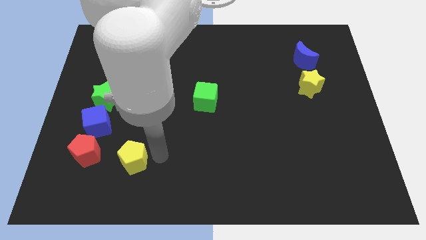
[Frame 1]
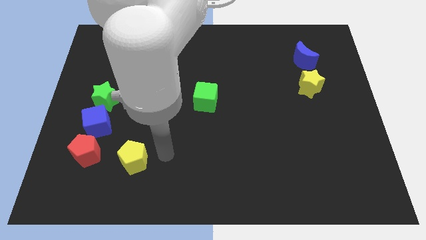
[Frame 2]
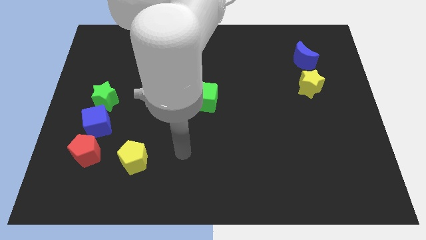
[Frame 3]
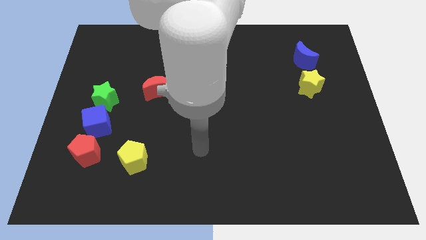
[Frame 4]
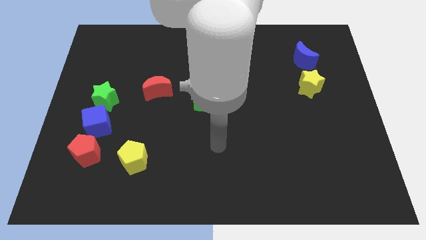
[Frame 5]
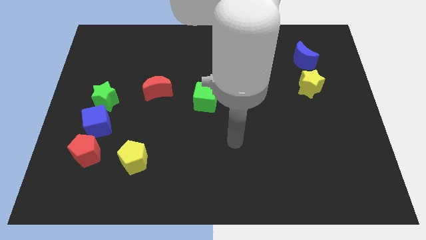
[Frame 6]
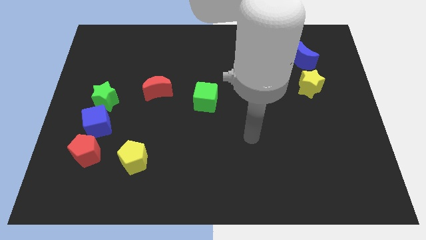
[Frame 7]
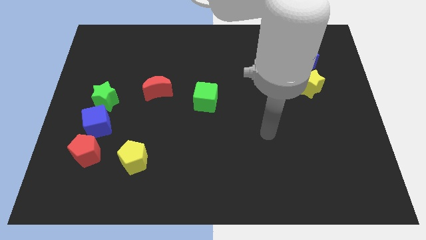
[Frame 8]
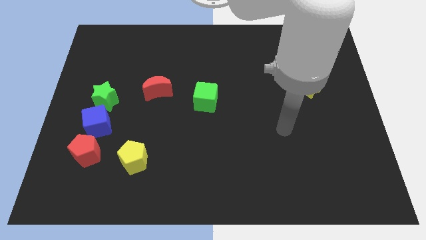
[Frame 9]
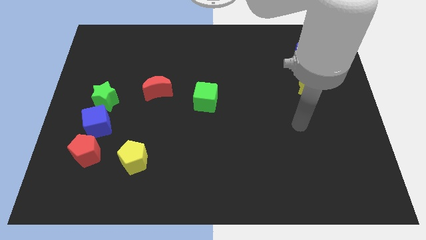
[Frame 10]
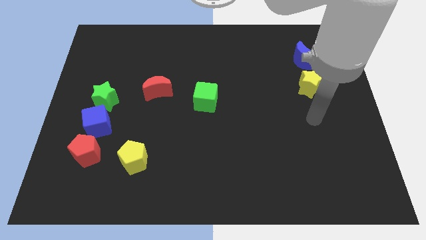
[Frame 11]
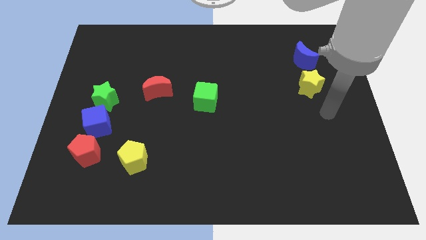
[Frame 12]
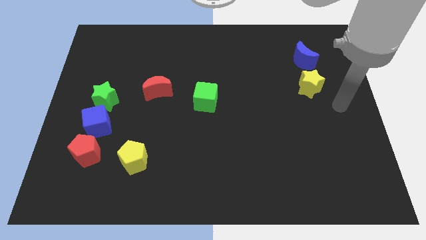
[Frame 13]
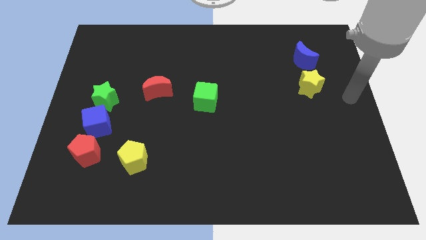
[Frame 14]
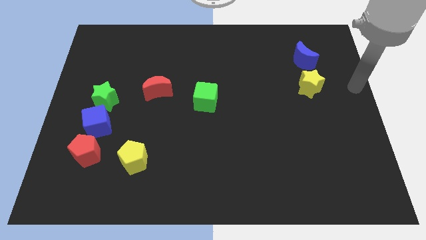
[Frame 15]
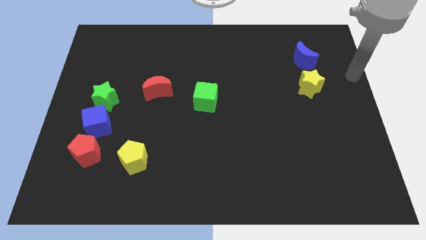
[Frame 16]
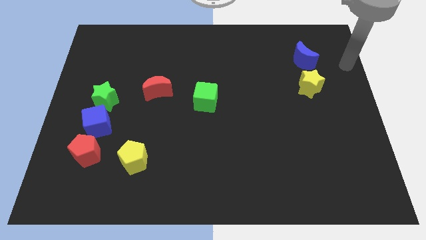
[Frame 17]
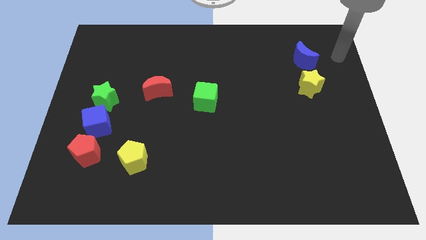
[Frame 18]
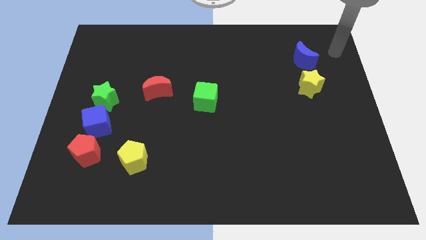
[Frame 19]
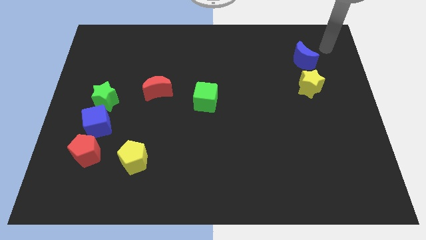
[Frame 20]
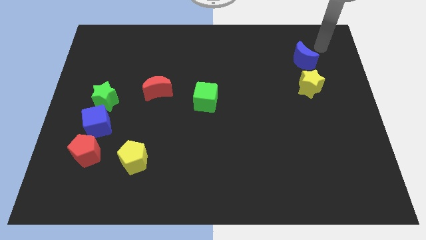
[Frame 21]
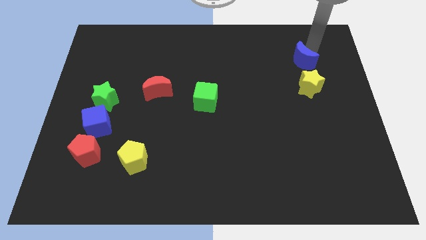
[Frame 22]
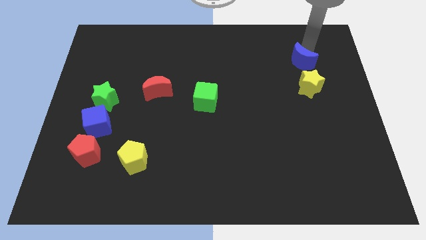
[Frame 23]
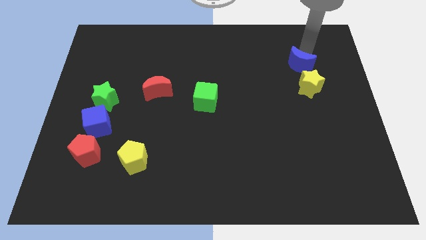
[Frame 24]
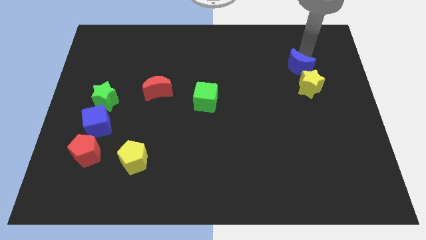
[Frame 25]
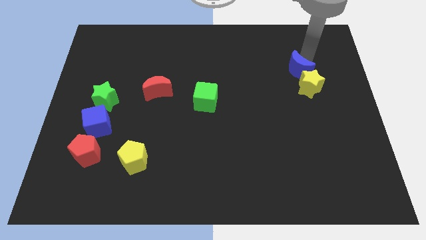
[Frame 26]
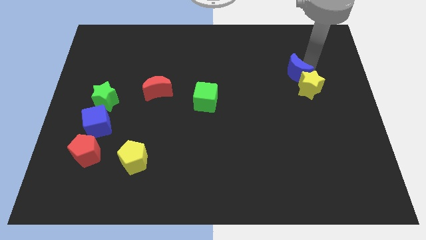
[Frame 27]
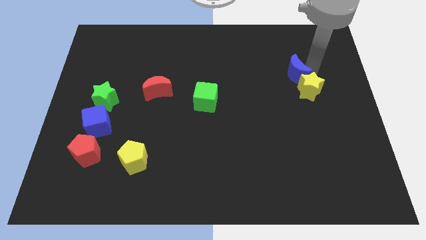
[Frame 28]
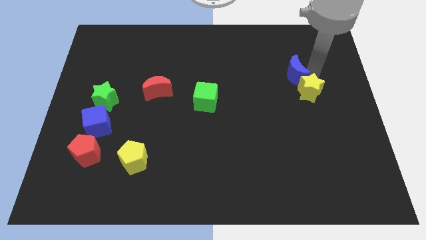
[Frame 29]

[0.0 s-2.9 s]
push the blue moon into the yellow star

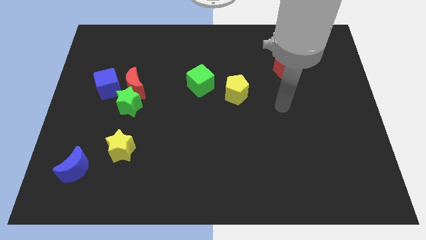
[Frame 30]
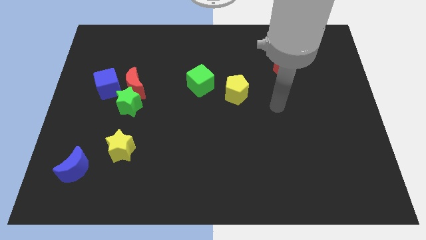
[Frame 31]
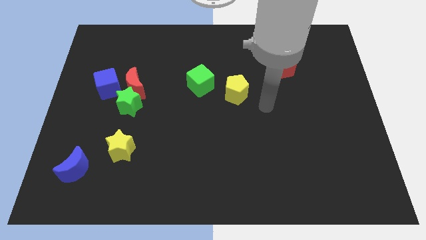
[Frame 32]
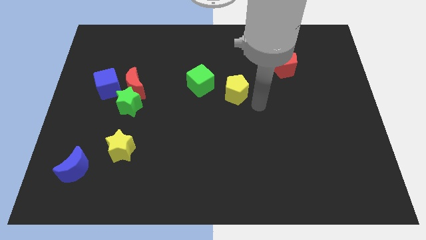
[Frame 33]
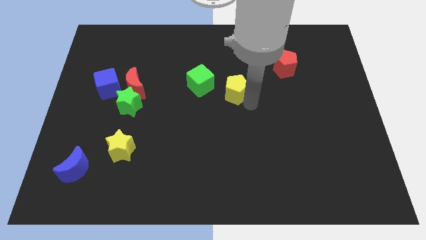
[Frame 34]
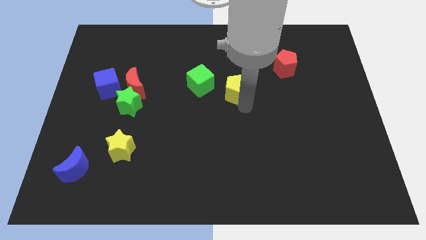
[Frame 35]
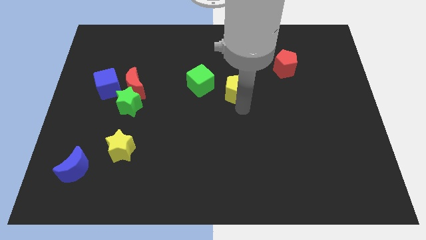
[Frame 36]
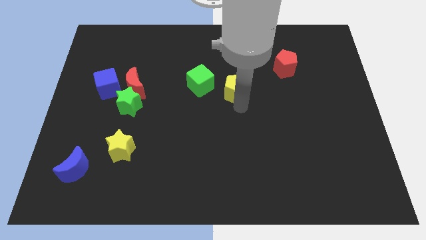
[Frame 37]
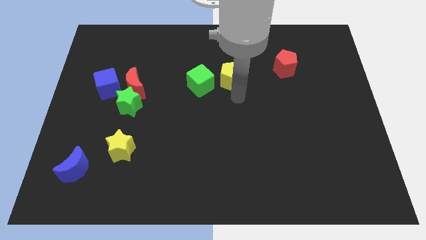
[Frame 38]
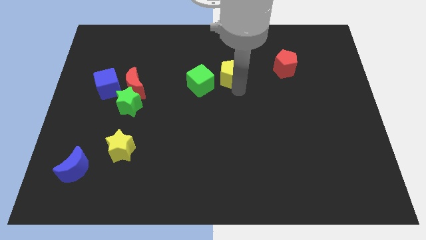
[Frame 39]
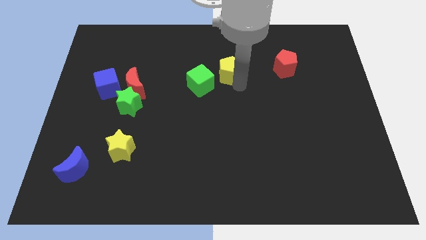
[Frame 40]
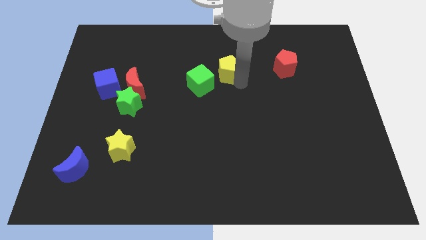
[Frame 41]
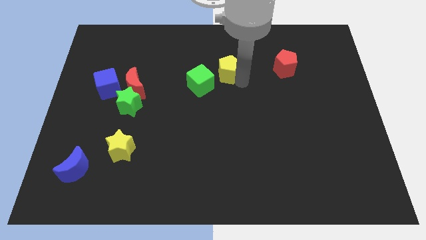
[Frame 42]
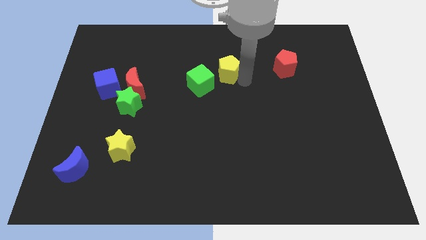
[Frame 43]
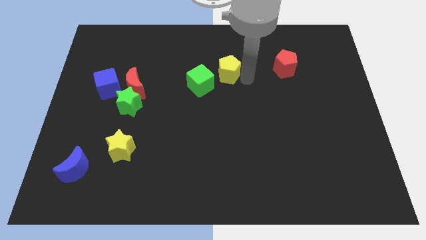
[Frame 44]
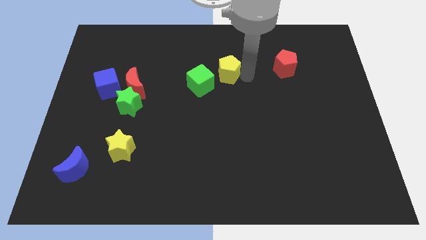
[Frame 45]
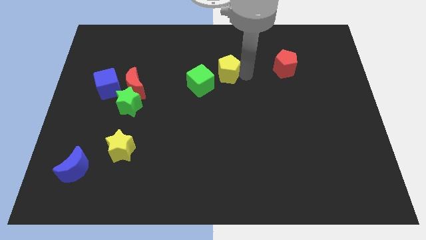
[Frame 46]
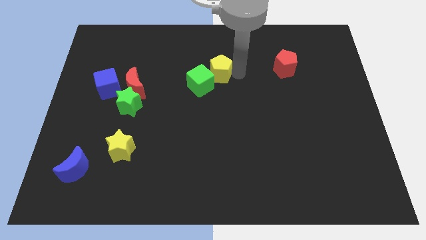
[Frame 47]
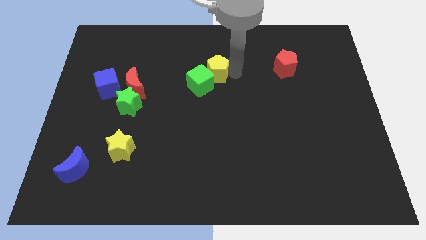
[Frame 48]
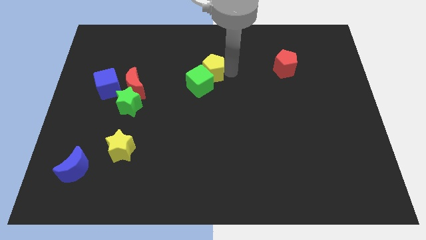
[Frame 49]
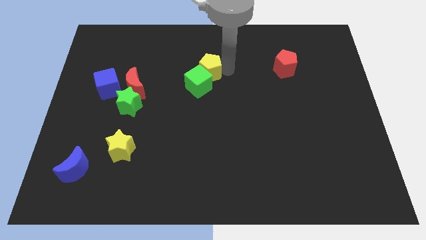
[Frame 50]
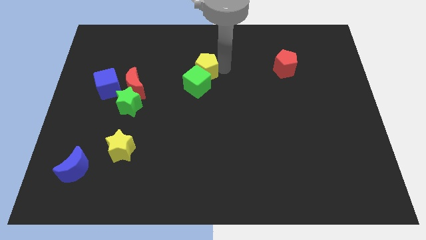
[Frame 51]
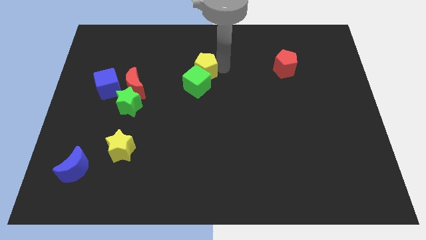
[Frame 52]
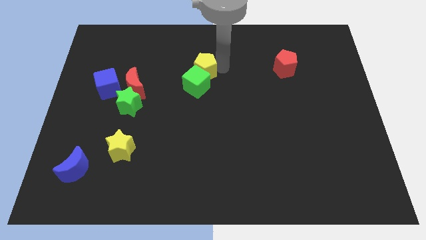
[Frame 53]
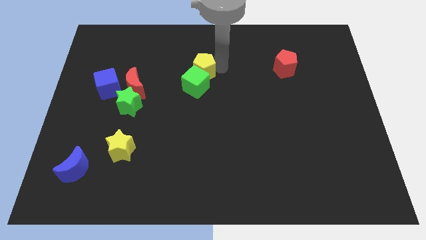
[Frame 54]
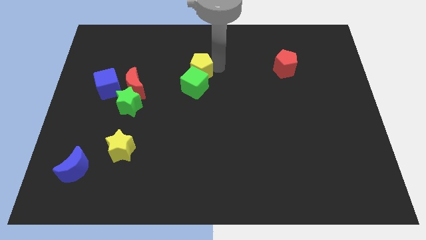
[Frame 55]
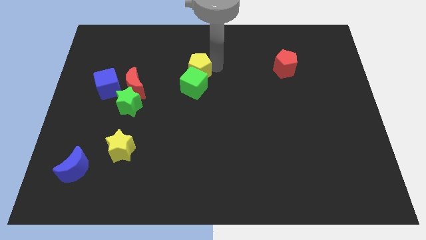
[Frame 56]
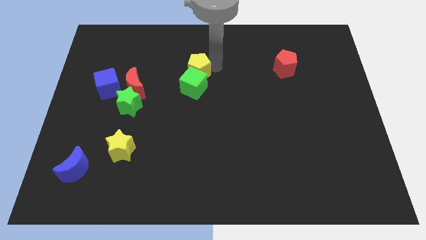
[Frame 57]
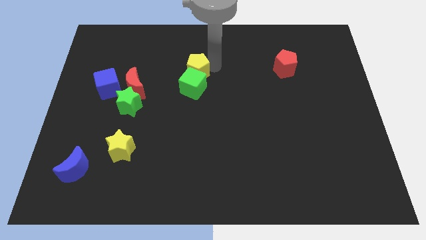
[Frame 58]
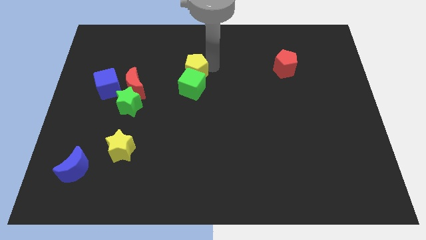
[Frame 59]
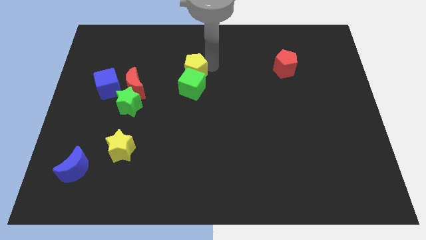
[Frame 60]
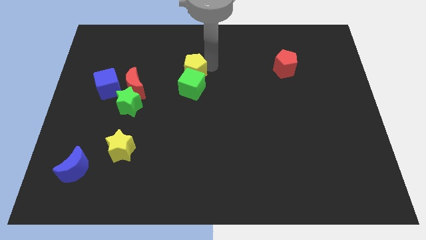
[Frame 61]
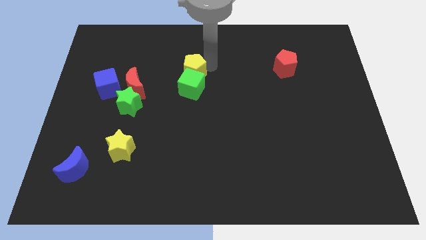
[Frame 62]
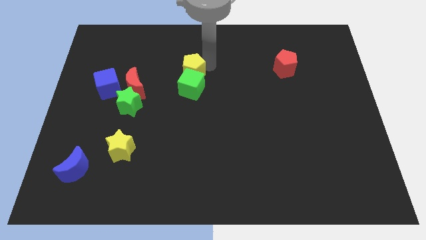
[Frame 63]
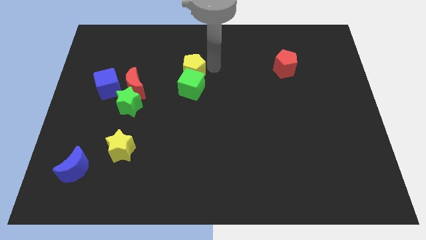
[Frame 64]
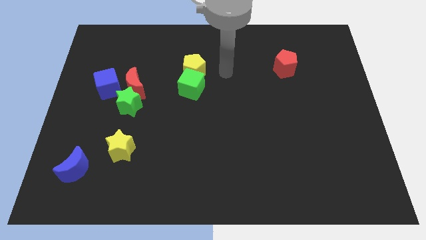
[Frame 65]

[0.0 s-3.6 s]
slide the yellow pentagon to the top of the green cube

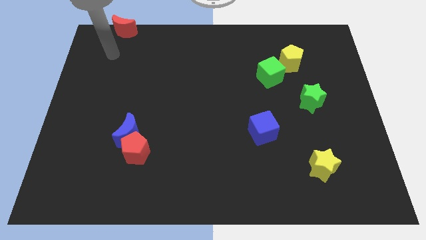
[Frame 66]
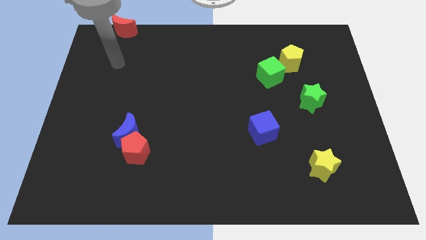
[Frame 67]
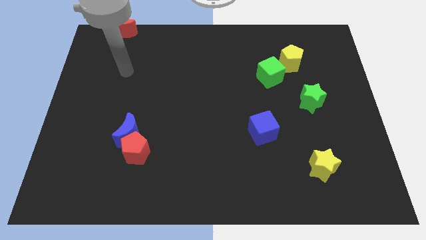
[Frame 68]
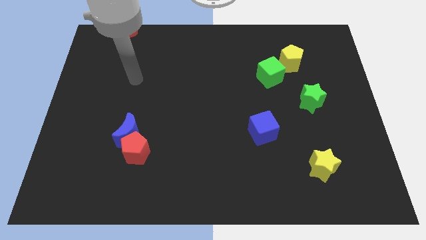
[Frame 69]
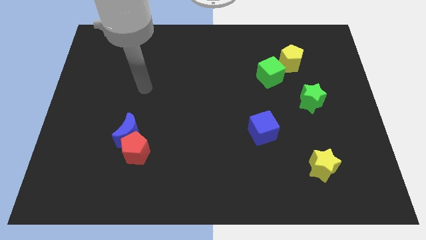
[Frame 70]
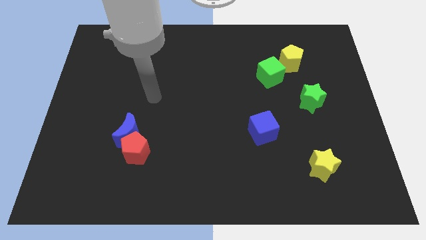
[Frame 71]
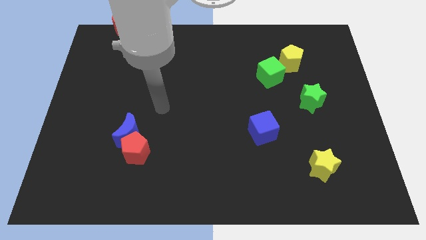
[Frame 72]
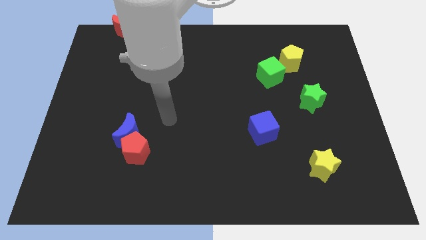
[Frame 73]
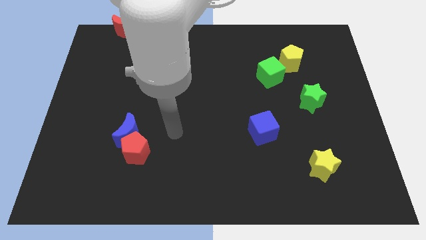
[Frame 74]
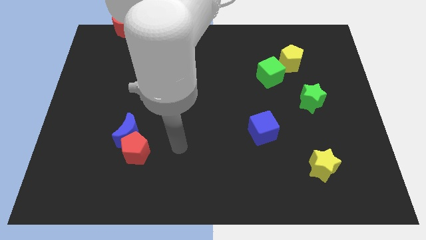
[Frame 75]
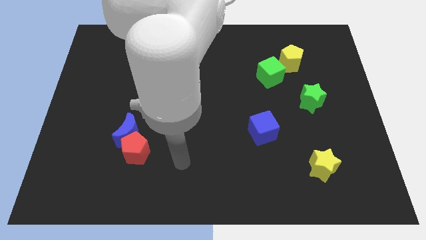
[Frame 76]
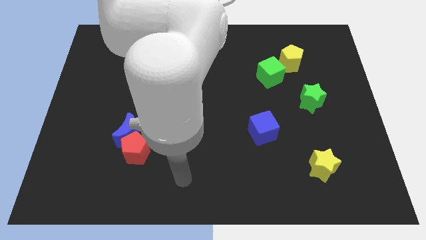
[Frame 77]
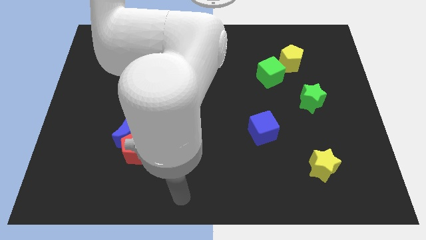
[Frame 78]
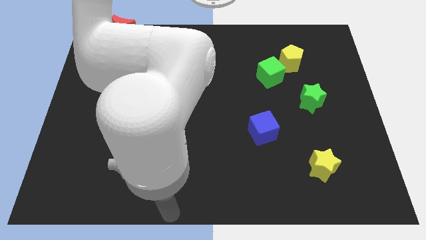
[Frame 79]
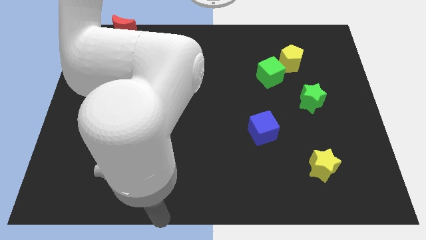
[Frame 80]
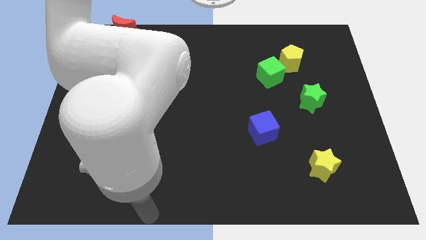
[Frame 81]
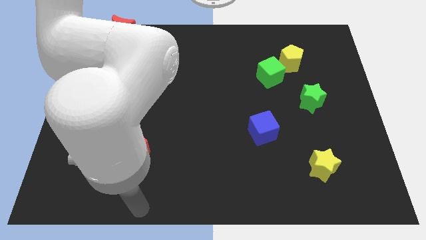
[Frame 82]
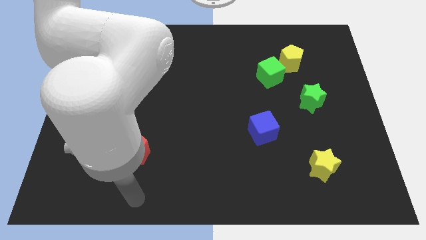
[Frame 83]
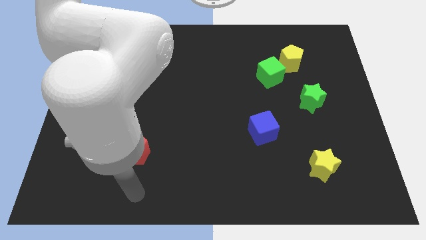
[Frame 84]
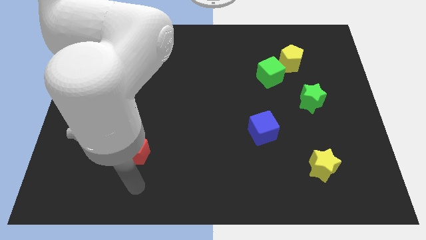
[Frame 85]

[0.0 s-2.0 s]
move your arm towards red pentagon

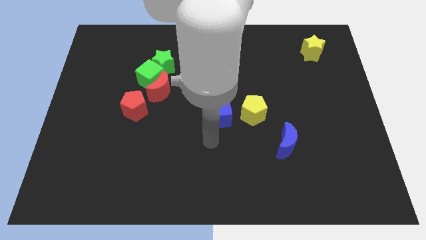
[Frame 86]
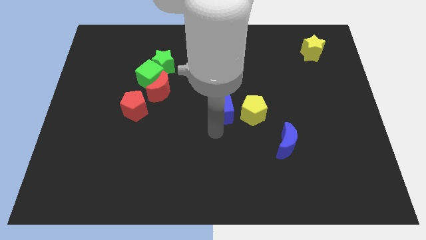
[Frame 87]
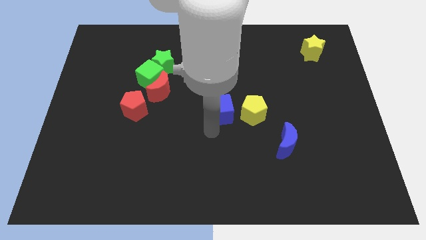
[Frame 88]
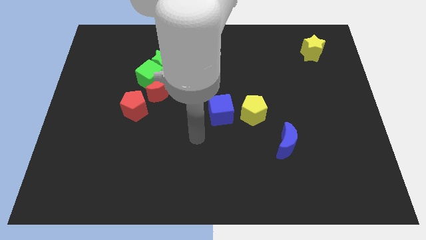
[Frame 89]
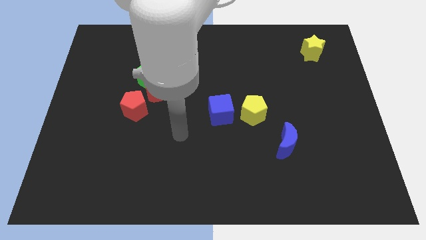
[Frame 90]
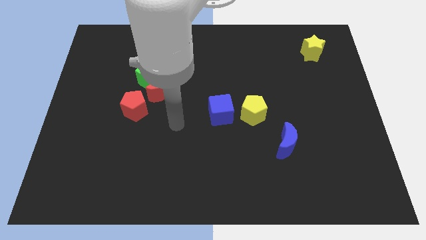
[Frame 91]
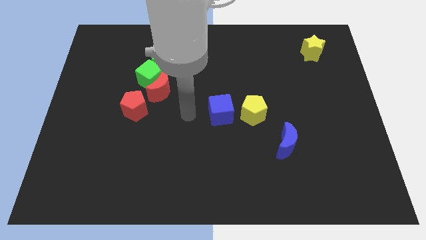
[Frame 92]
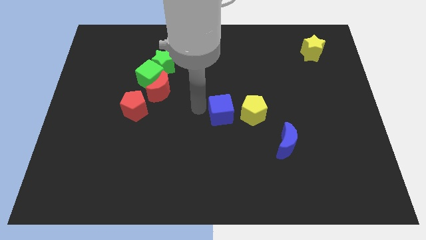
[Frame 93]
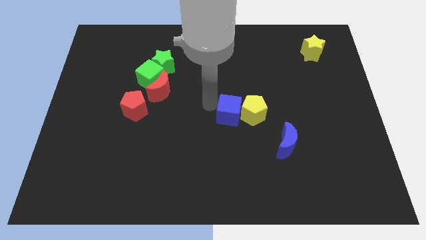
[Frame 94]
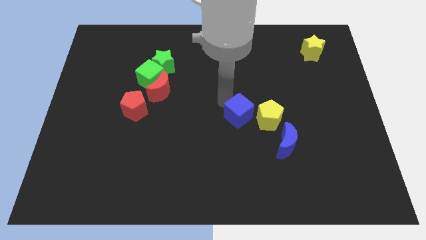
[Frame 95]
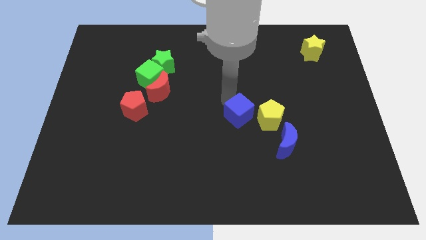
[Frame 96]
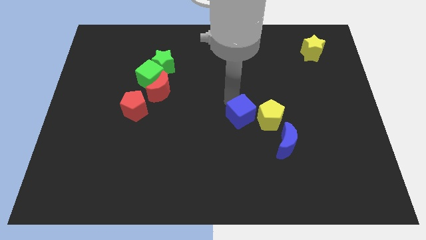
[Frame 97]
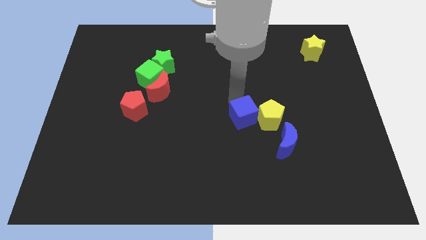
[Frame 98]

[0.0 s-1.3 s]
move the blue cube into left of the yellow pentagon
